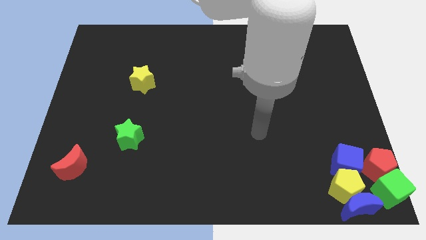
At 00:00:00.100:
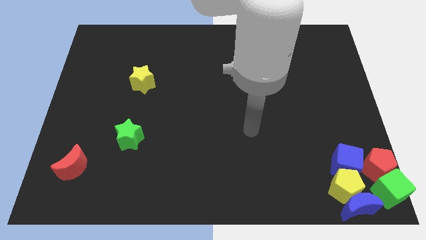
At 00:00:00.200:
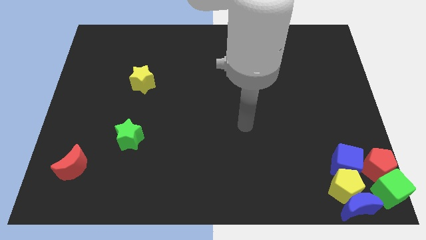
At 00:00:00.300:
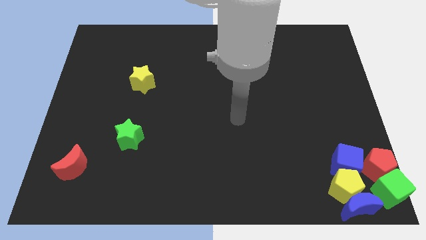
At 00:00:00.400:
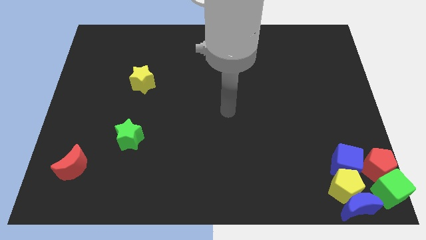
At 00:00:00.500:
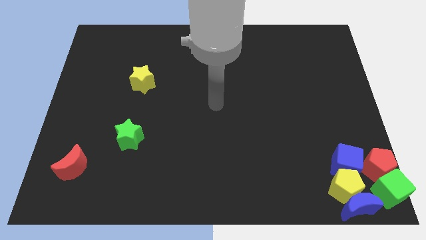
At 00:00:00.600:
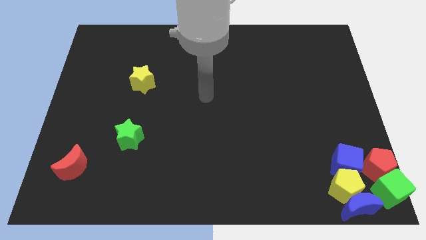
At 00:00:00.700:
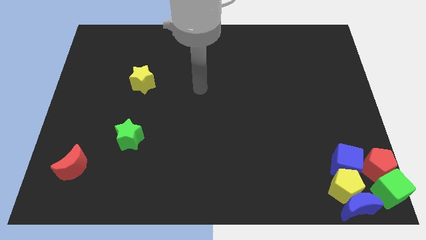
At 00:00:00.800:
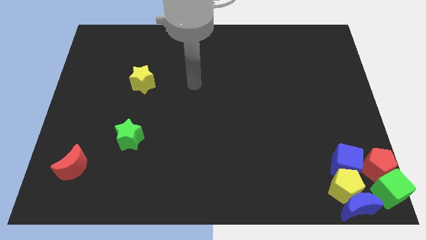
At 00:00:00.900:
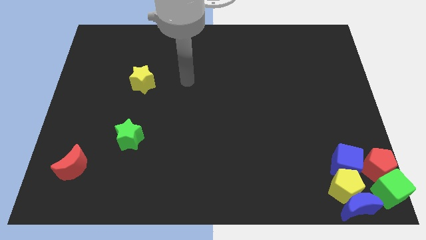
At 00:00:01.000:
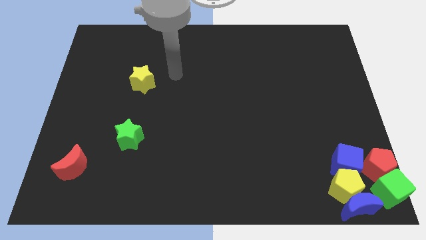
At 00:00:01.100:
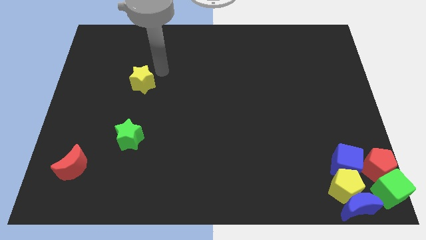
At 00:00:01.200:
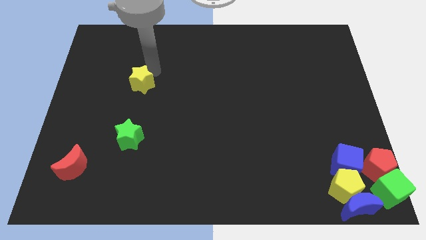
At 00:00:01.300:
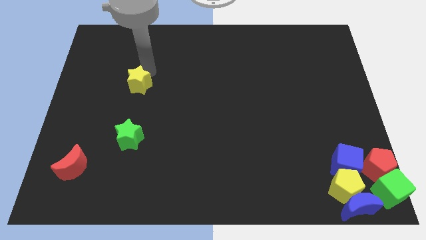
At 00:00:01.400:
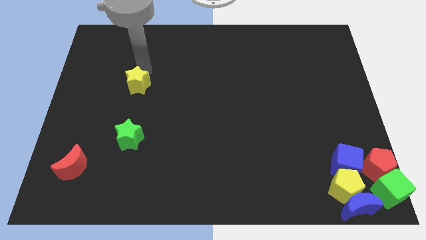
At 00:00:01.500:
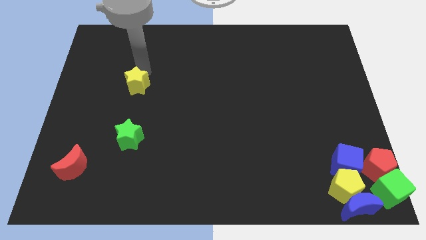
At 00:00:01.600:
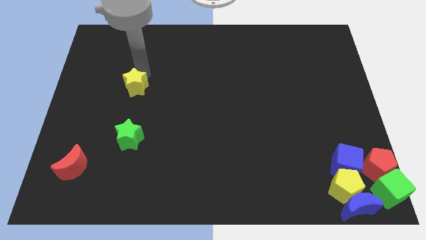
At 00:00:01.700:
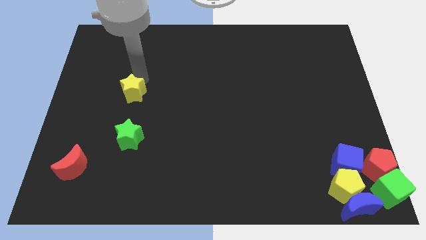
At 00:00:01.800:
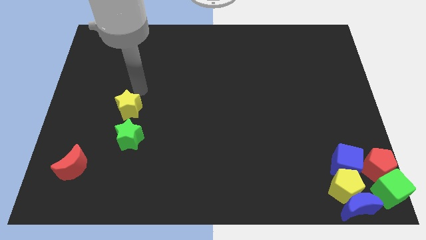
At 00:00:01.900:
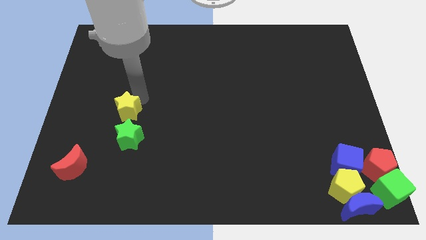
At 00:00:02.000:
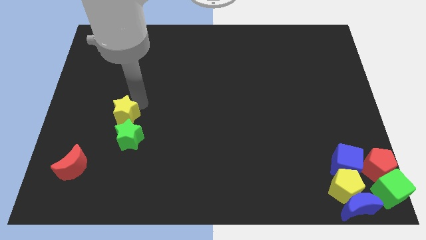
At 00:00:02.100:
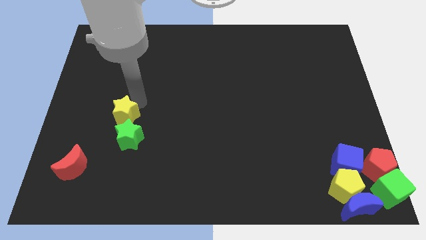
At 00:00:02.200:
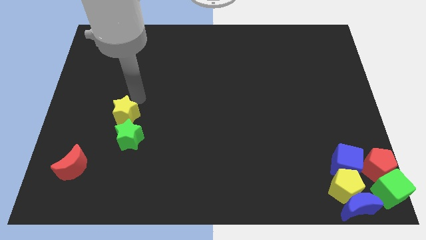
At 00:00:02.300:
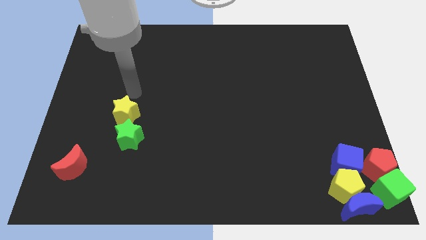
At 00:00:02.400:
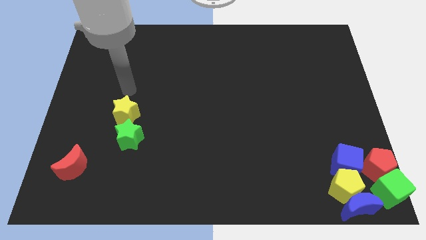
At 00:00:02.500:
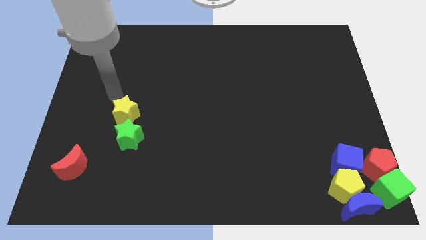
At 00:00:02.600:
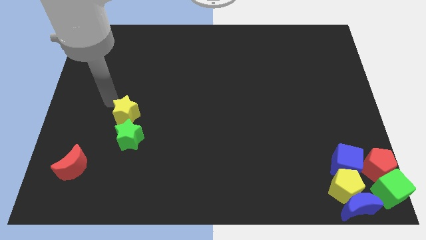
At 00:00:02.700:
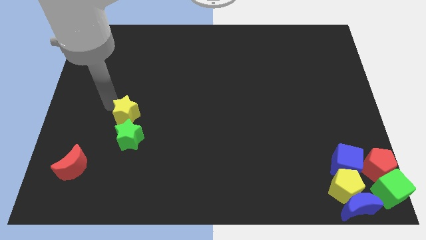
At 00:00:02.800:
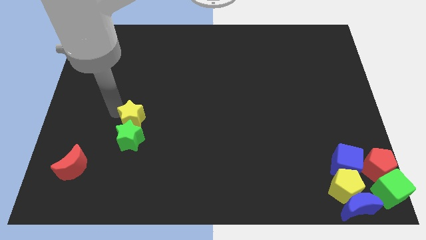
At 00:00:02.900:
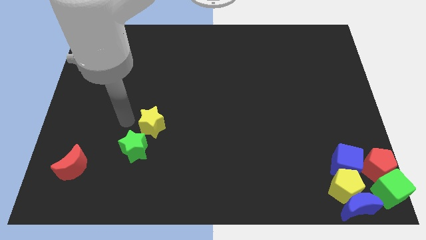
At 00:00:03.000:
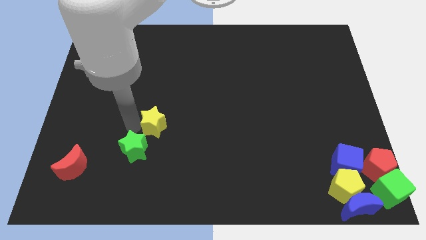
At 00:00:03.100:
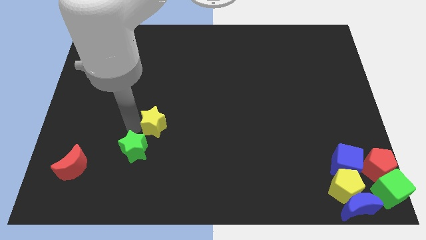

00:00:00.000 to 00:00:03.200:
place the yellow star to the top of the green star

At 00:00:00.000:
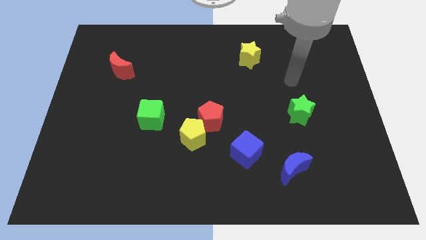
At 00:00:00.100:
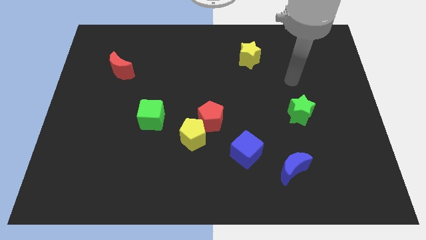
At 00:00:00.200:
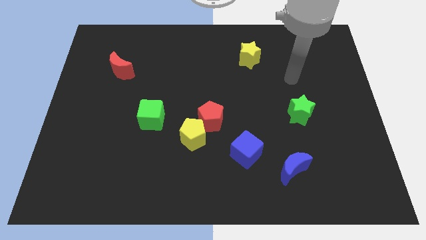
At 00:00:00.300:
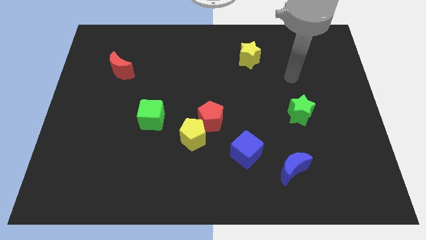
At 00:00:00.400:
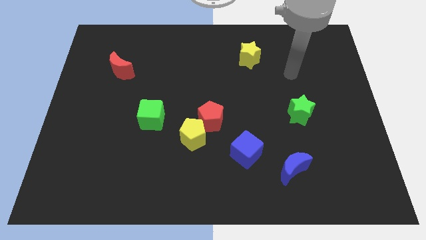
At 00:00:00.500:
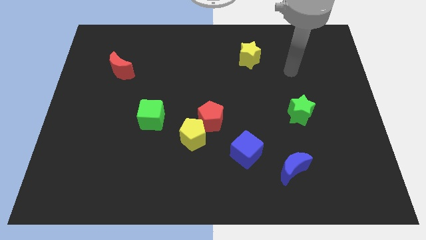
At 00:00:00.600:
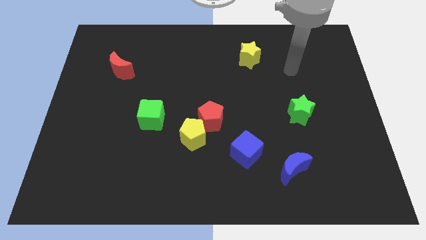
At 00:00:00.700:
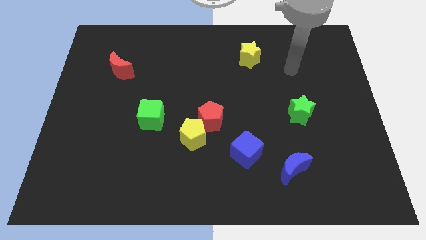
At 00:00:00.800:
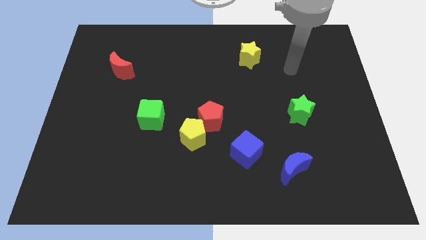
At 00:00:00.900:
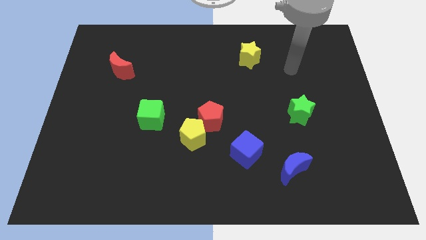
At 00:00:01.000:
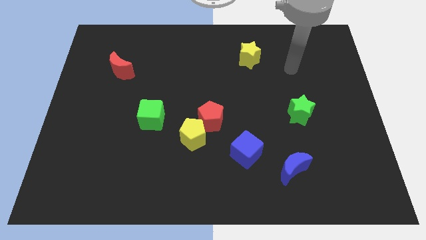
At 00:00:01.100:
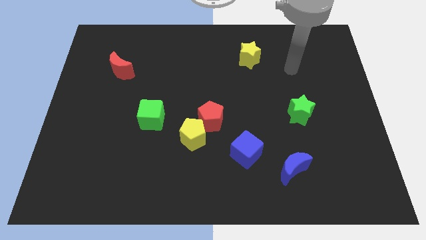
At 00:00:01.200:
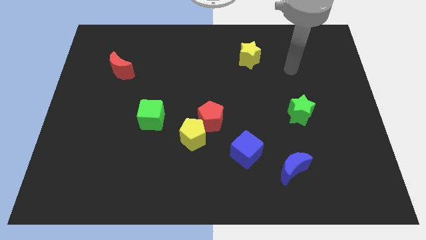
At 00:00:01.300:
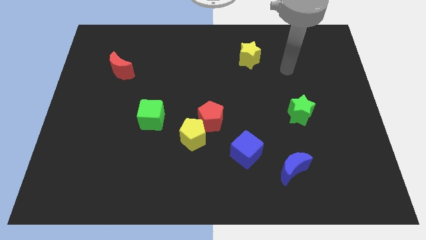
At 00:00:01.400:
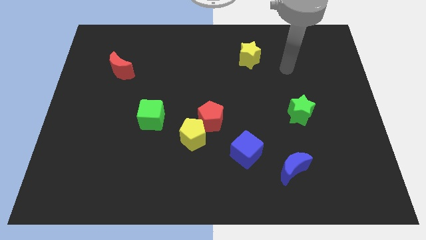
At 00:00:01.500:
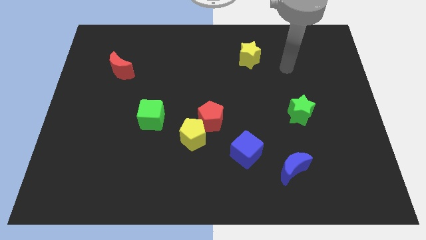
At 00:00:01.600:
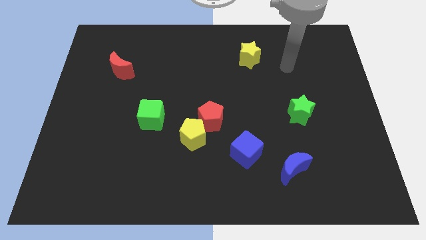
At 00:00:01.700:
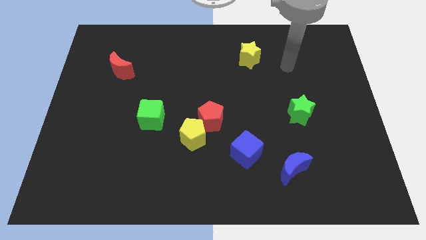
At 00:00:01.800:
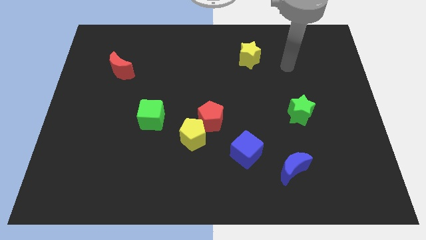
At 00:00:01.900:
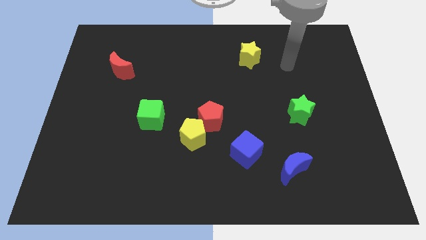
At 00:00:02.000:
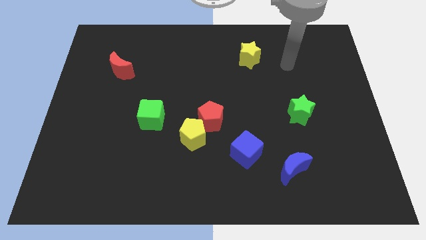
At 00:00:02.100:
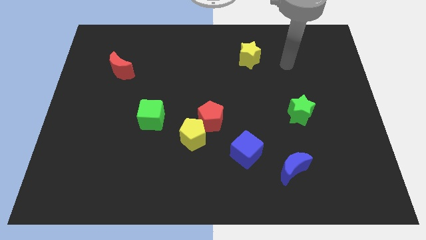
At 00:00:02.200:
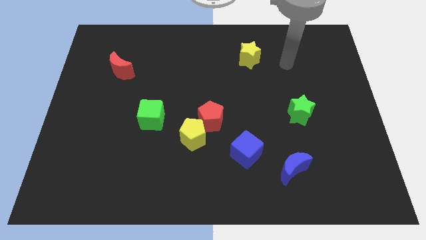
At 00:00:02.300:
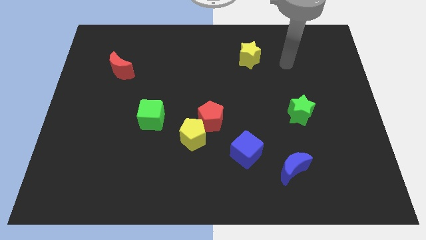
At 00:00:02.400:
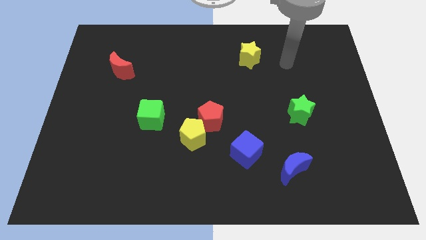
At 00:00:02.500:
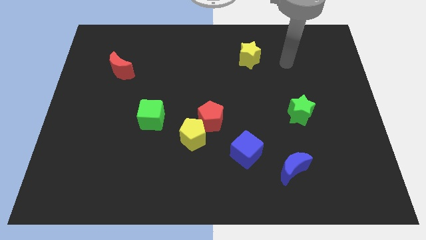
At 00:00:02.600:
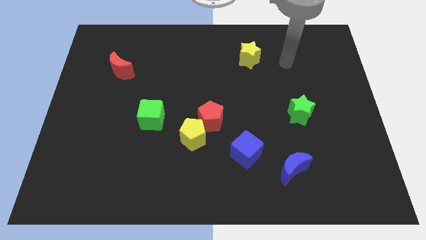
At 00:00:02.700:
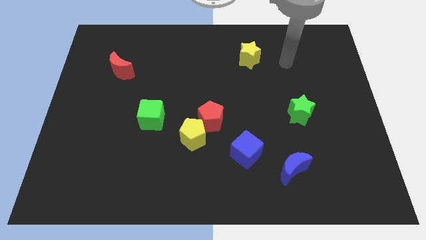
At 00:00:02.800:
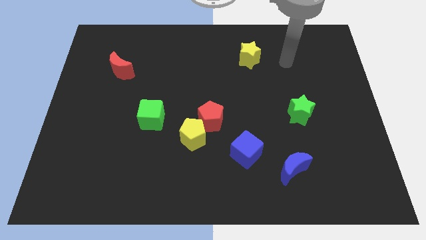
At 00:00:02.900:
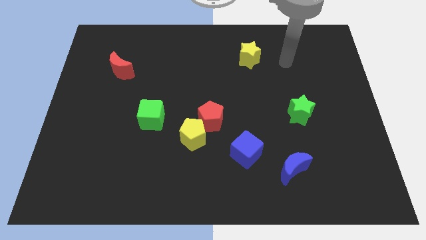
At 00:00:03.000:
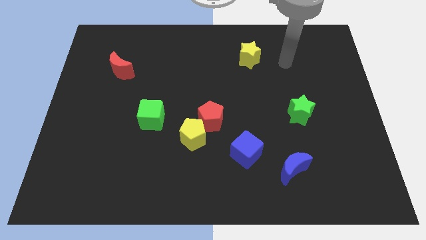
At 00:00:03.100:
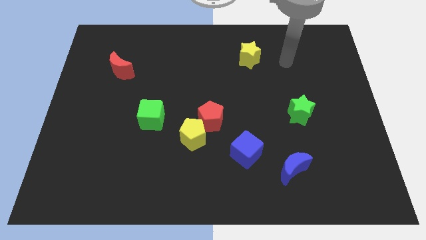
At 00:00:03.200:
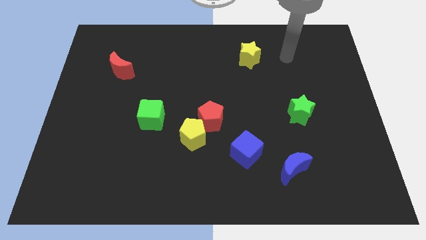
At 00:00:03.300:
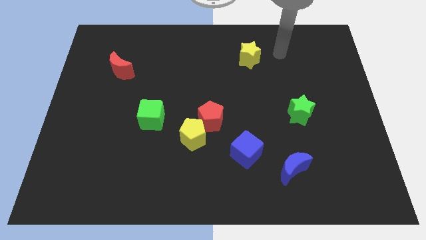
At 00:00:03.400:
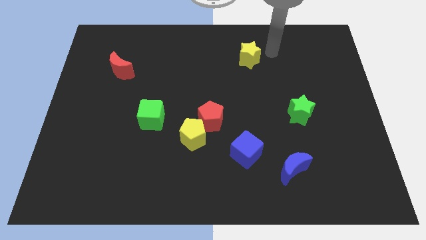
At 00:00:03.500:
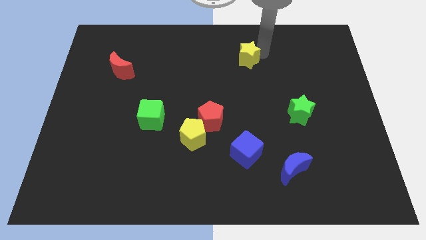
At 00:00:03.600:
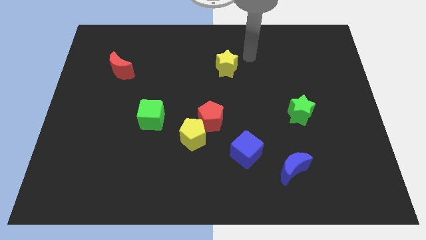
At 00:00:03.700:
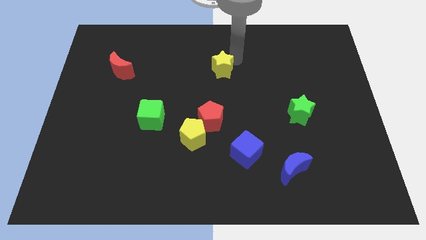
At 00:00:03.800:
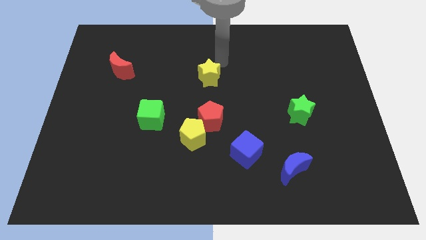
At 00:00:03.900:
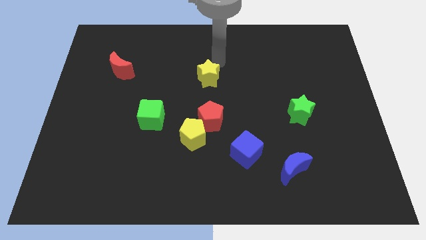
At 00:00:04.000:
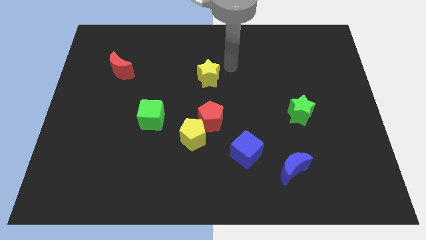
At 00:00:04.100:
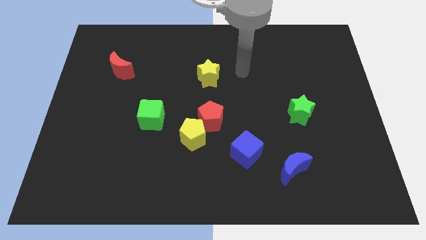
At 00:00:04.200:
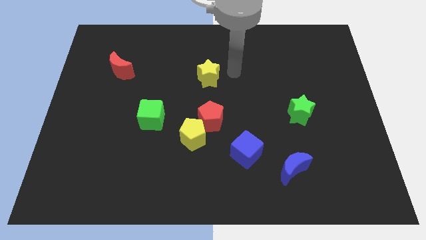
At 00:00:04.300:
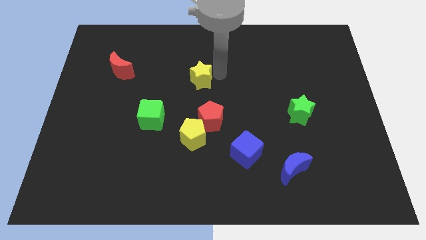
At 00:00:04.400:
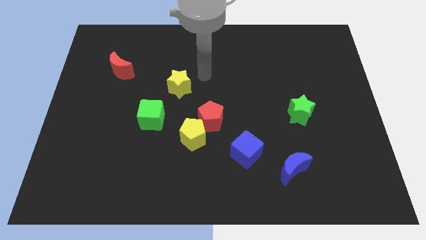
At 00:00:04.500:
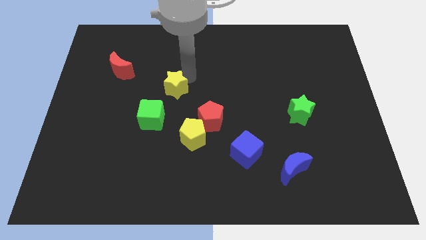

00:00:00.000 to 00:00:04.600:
push the yellow star towards the green cube

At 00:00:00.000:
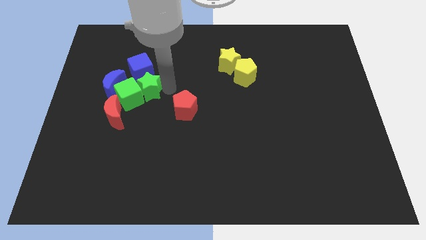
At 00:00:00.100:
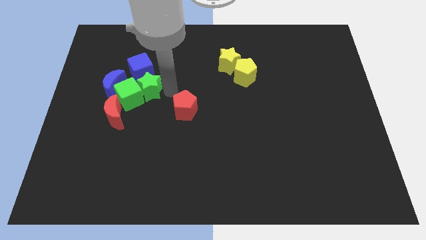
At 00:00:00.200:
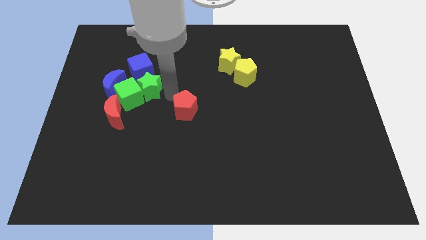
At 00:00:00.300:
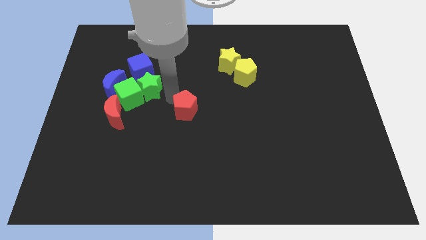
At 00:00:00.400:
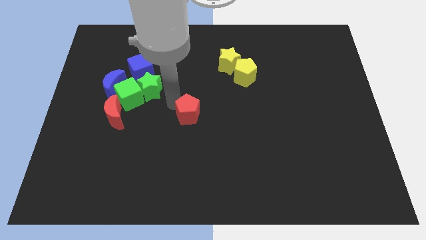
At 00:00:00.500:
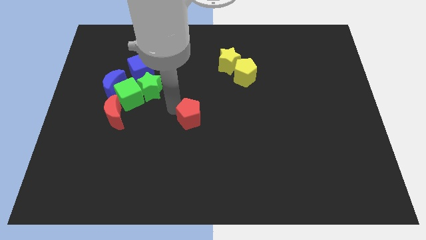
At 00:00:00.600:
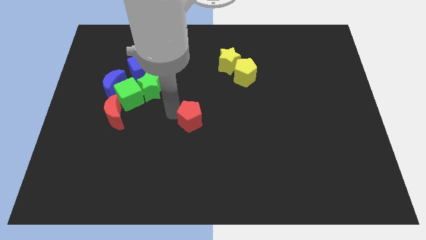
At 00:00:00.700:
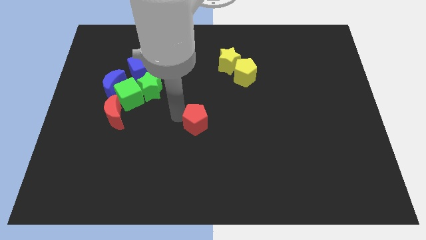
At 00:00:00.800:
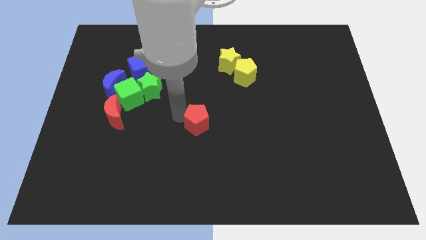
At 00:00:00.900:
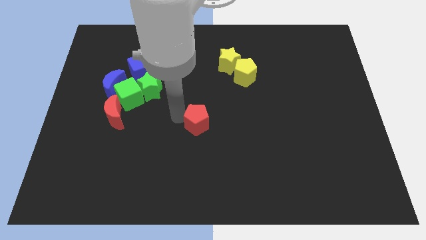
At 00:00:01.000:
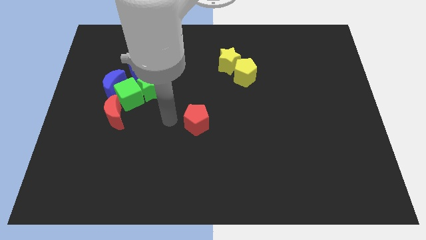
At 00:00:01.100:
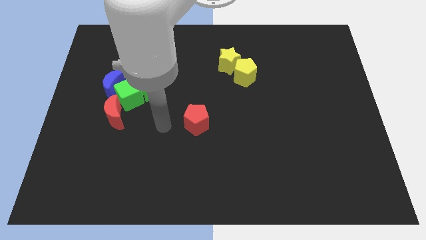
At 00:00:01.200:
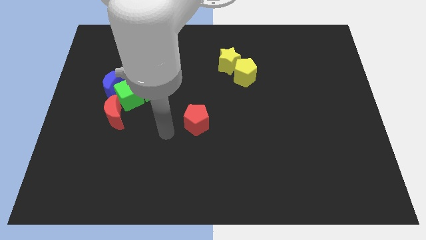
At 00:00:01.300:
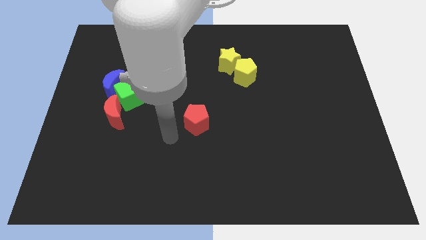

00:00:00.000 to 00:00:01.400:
move the red pentagon towards the bottom side of the board
